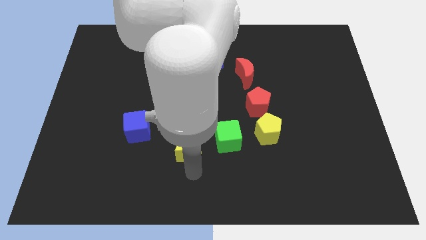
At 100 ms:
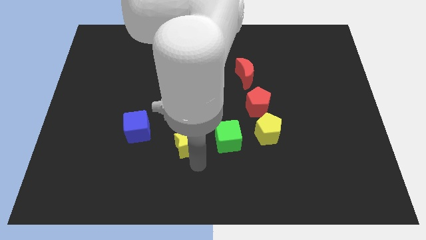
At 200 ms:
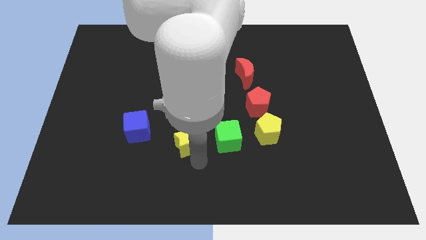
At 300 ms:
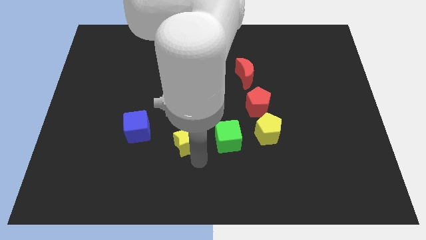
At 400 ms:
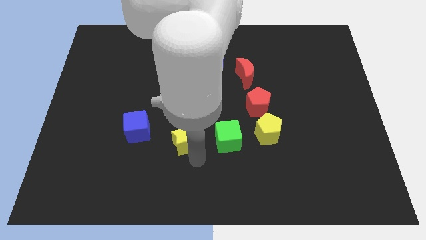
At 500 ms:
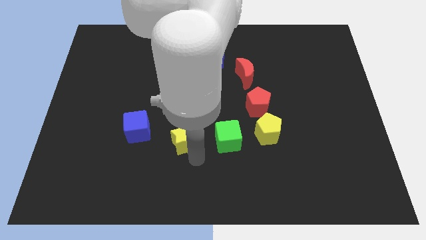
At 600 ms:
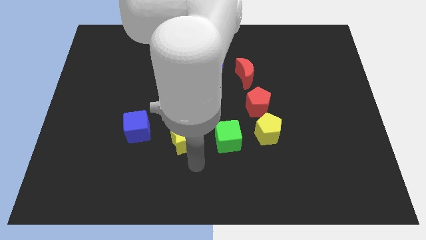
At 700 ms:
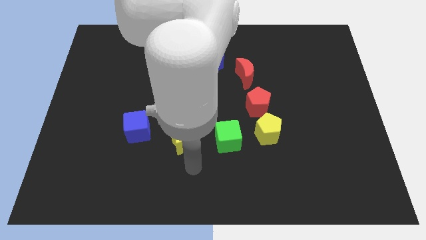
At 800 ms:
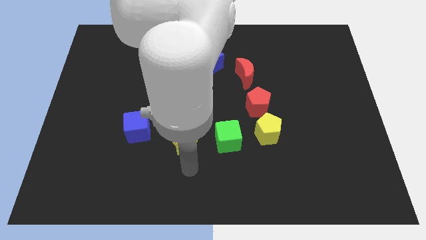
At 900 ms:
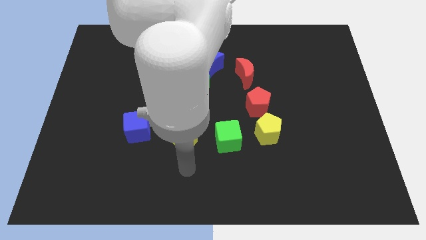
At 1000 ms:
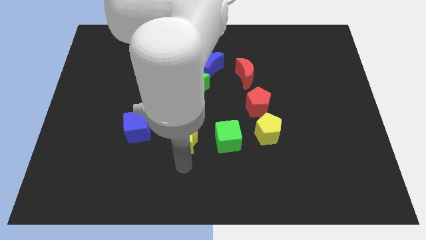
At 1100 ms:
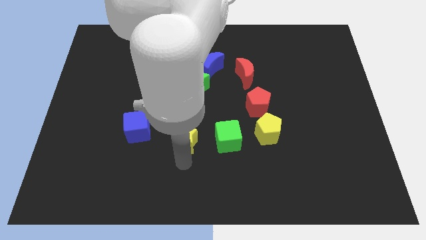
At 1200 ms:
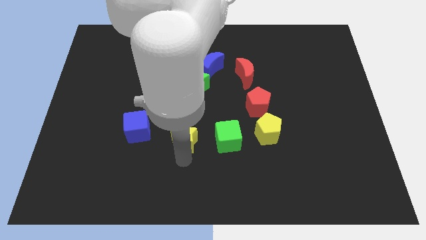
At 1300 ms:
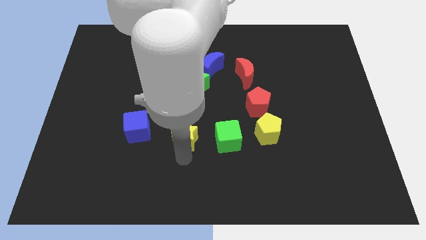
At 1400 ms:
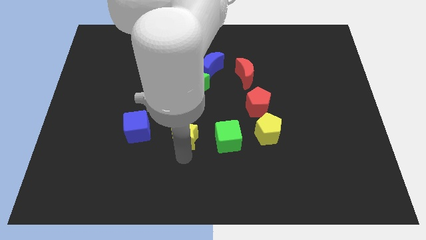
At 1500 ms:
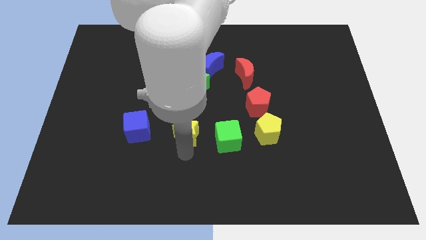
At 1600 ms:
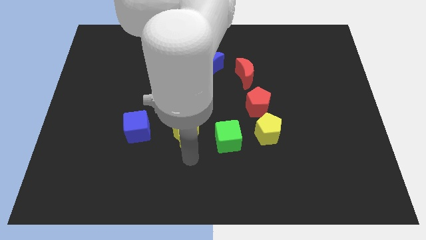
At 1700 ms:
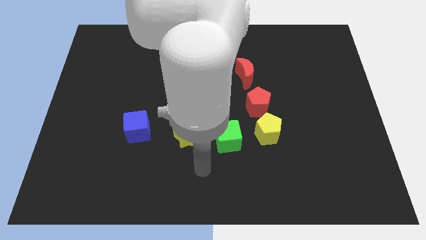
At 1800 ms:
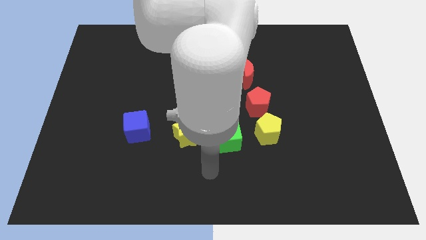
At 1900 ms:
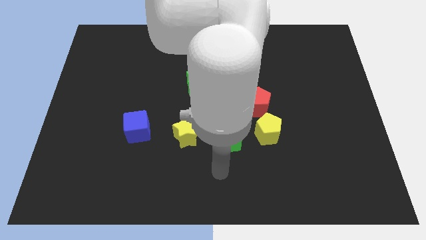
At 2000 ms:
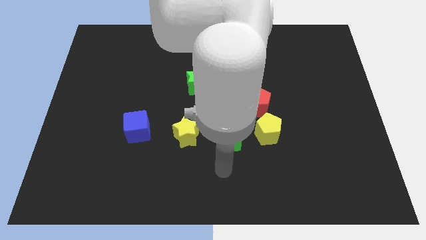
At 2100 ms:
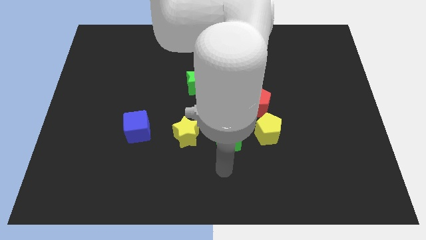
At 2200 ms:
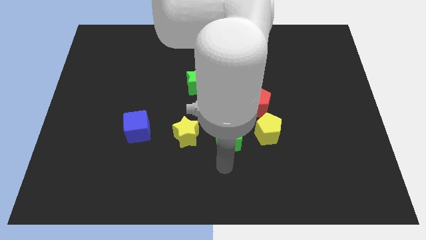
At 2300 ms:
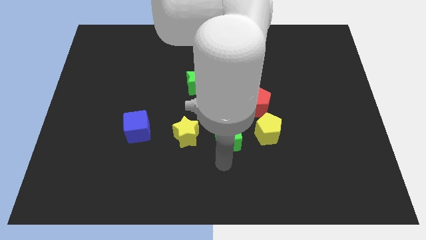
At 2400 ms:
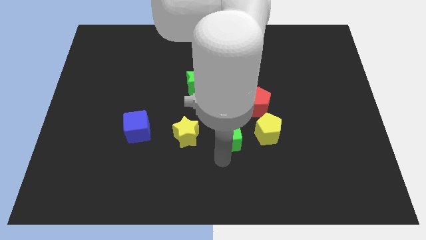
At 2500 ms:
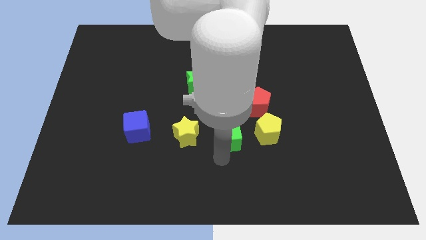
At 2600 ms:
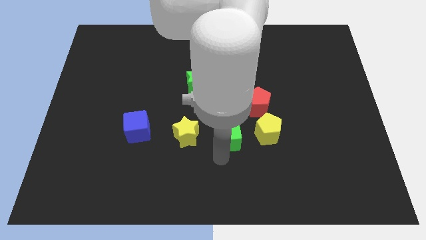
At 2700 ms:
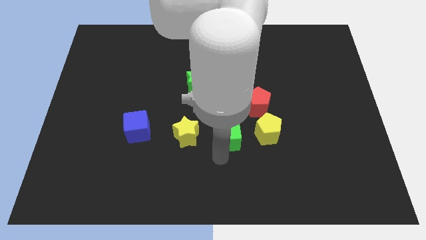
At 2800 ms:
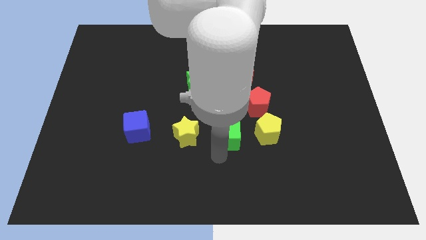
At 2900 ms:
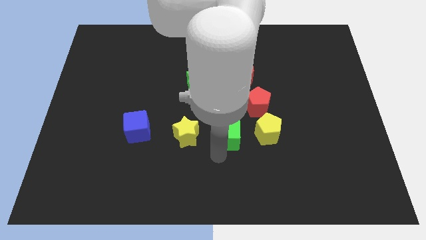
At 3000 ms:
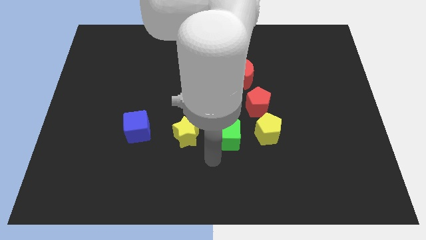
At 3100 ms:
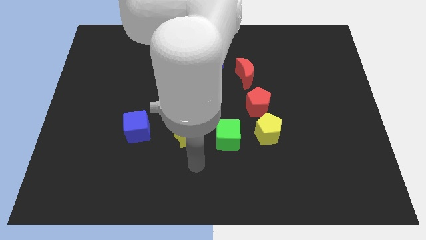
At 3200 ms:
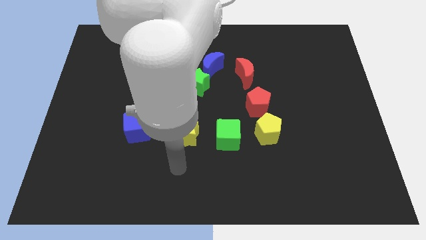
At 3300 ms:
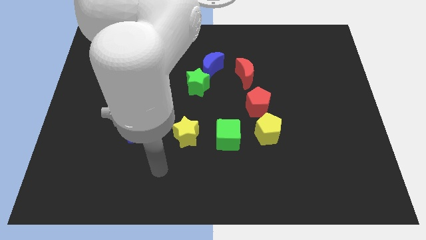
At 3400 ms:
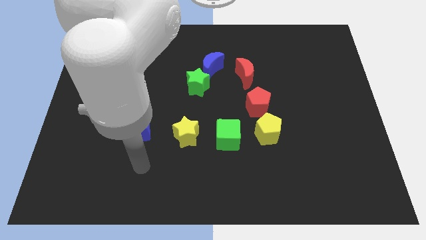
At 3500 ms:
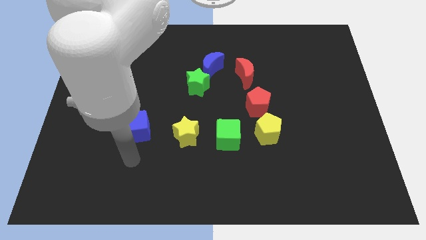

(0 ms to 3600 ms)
adjust the green cube and yellow star to the left side of the yellow pentagon

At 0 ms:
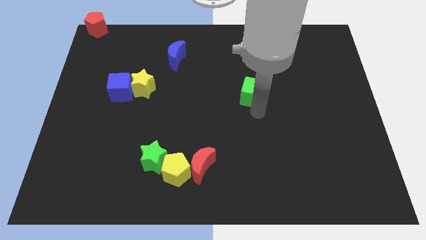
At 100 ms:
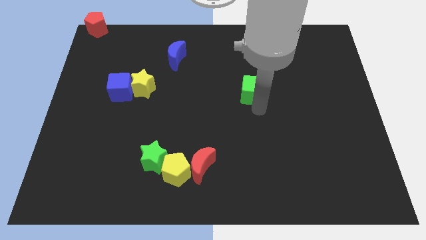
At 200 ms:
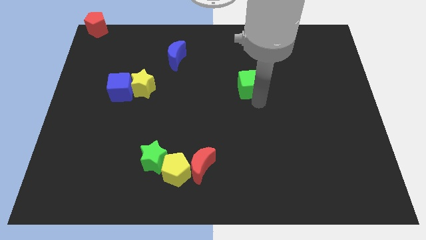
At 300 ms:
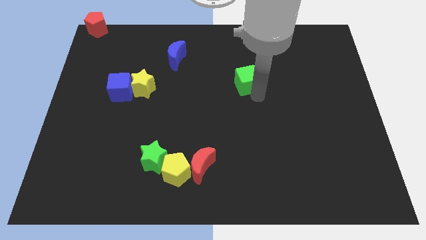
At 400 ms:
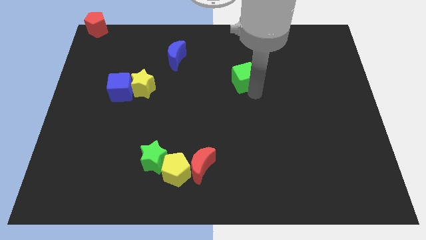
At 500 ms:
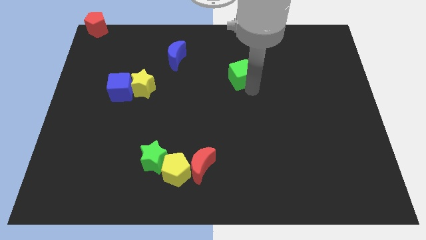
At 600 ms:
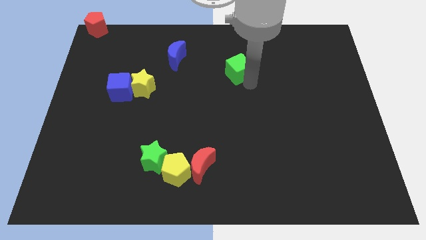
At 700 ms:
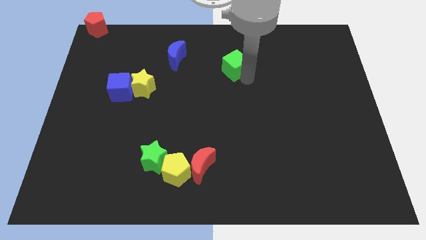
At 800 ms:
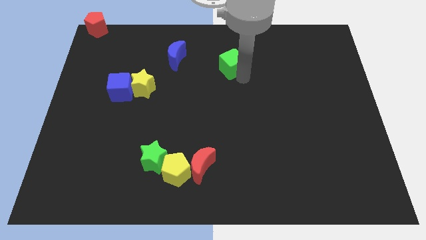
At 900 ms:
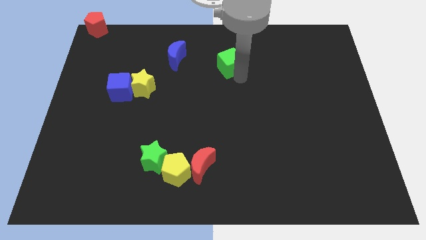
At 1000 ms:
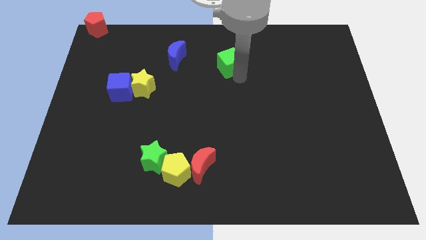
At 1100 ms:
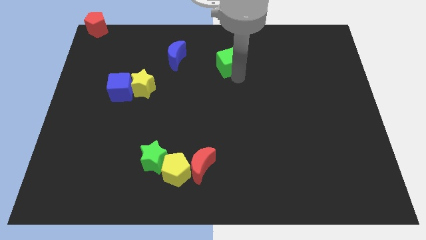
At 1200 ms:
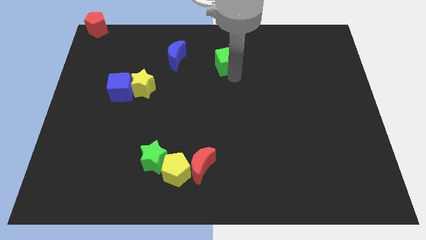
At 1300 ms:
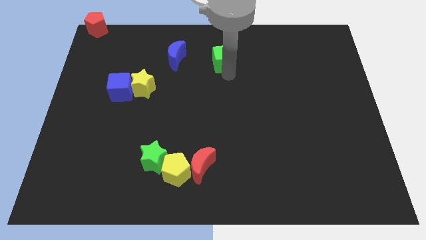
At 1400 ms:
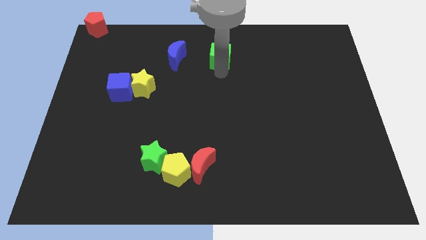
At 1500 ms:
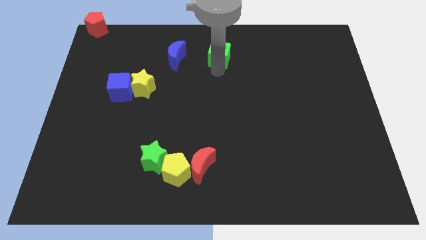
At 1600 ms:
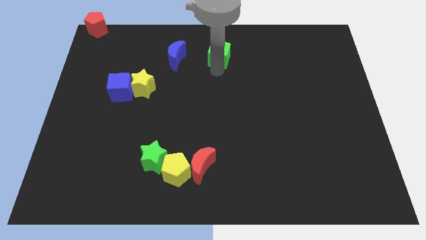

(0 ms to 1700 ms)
place green cube to the right of blue moon

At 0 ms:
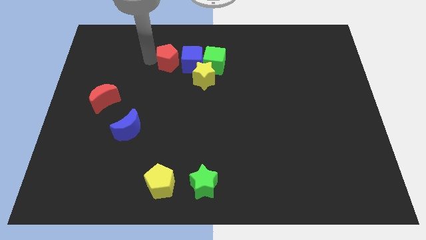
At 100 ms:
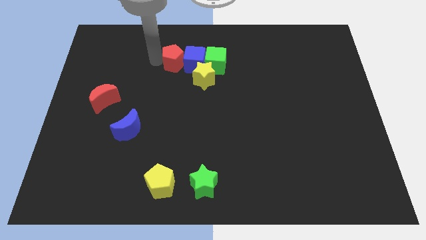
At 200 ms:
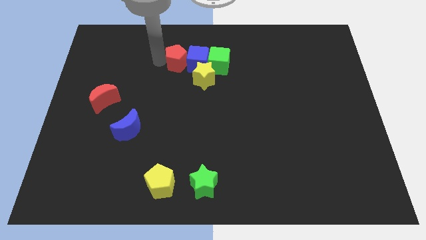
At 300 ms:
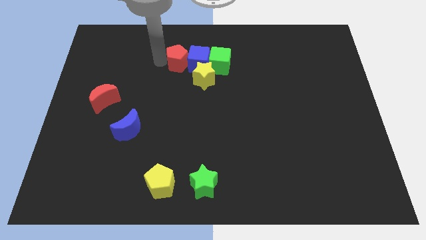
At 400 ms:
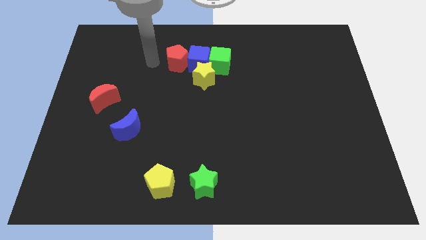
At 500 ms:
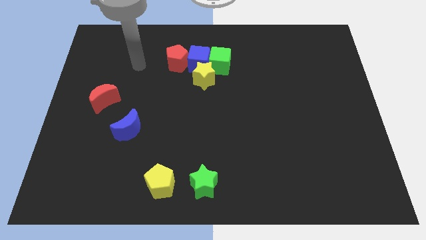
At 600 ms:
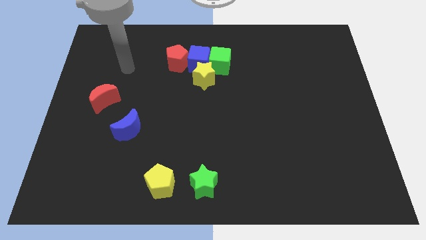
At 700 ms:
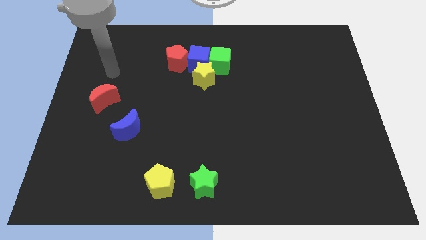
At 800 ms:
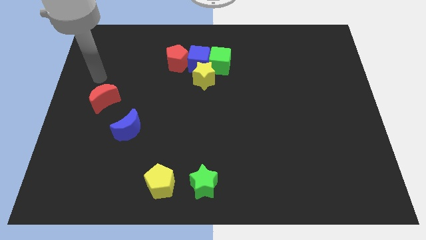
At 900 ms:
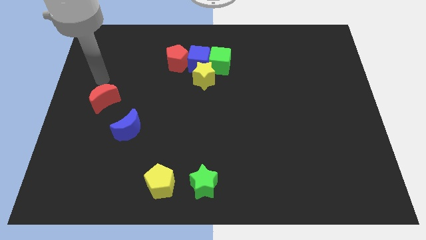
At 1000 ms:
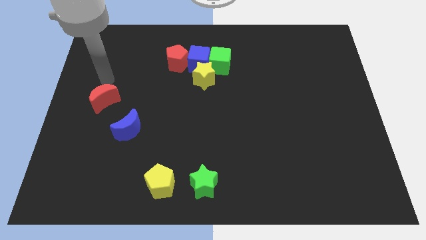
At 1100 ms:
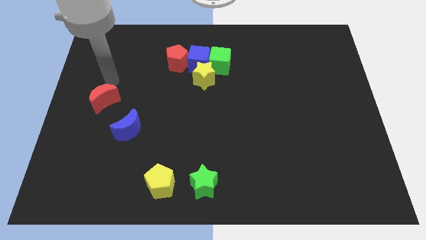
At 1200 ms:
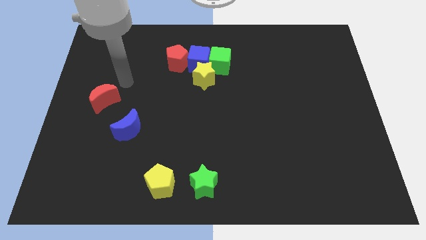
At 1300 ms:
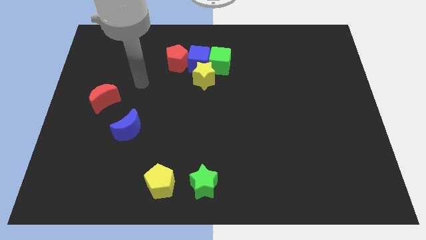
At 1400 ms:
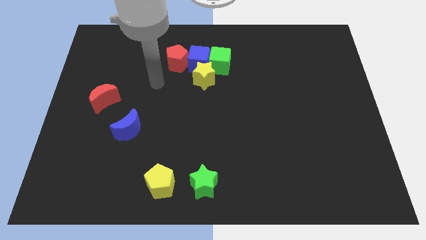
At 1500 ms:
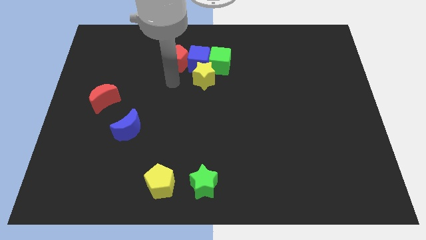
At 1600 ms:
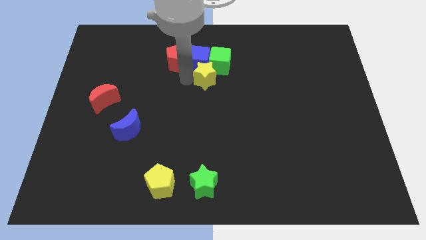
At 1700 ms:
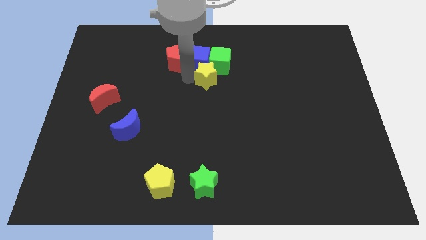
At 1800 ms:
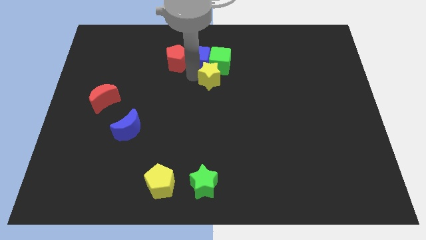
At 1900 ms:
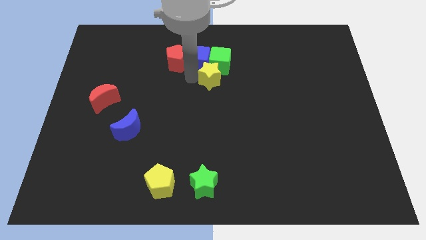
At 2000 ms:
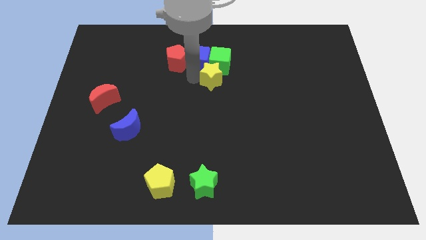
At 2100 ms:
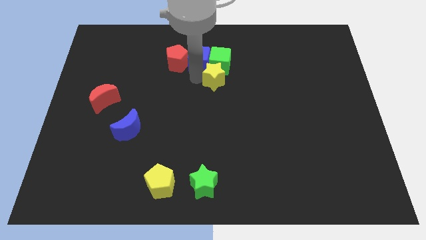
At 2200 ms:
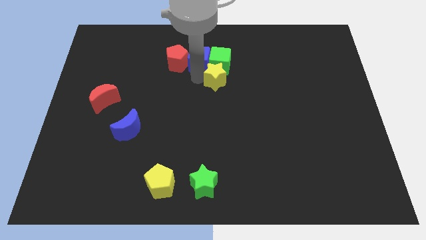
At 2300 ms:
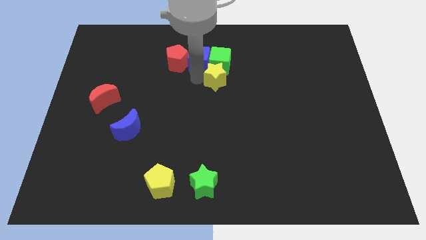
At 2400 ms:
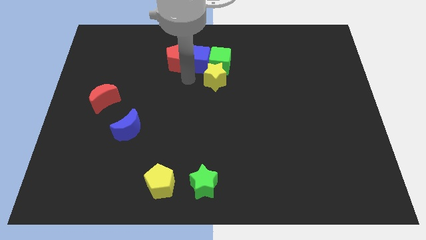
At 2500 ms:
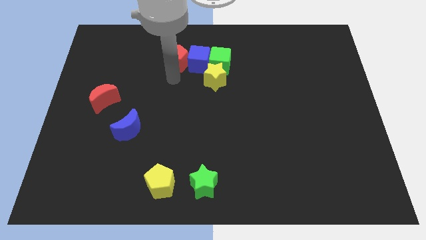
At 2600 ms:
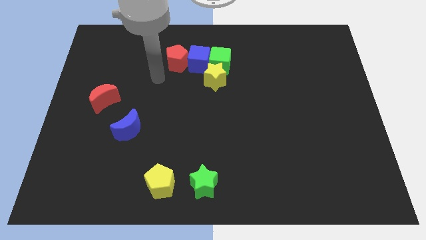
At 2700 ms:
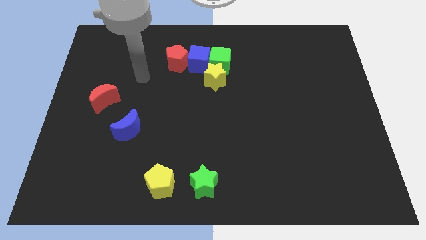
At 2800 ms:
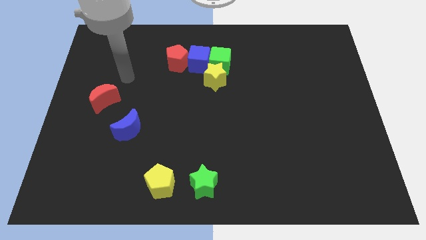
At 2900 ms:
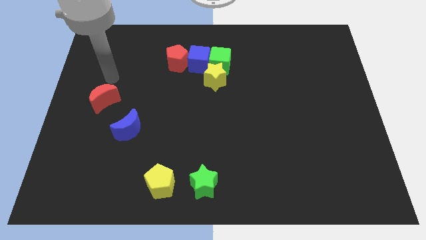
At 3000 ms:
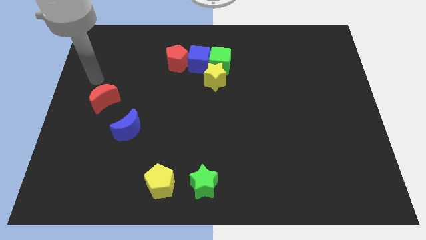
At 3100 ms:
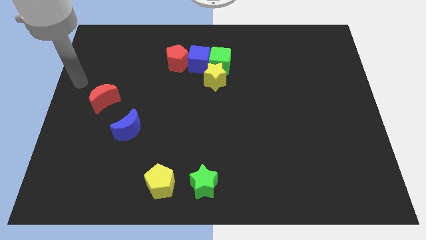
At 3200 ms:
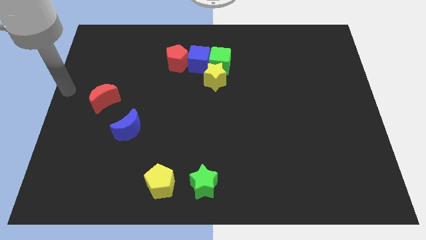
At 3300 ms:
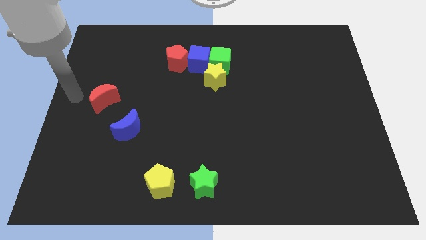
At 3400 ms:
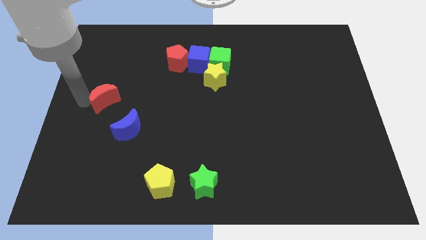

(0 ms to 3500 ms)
slide the red pentagon along with the yellow star to the right side of the board
